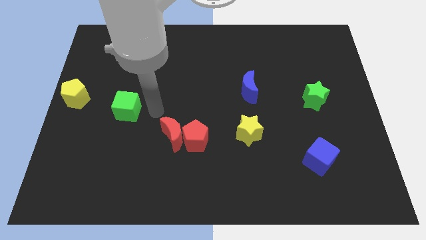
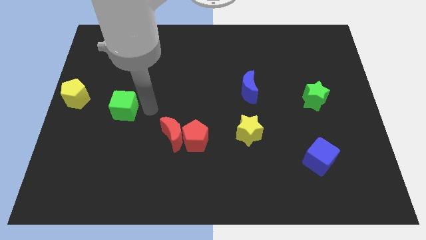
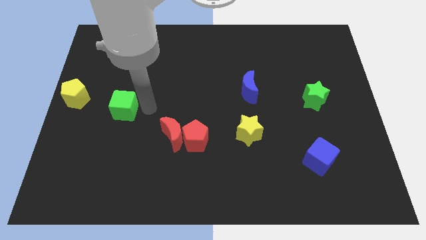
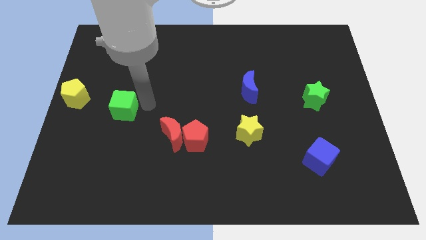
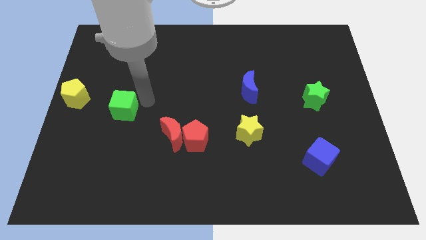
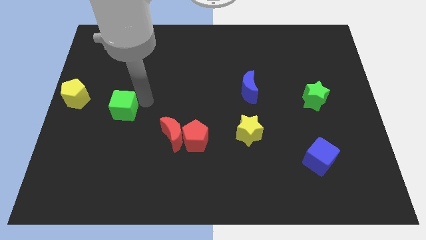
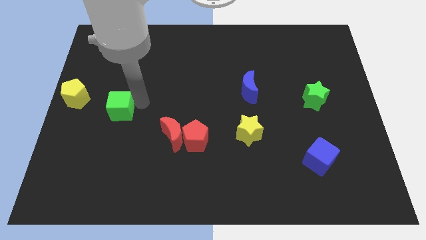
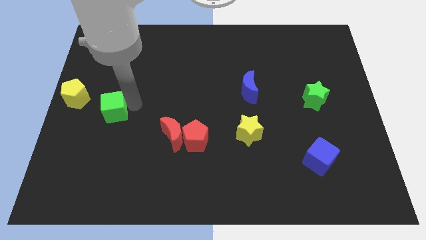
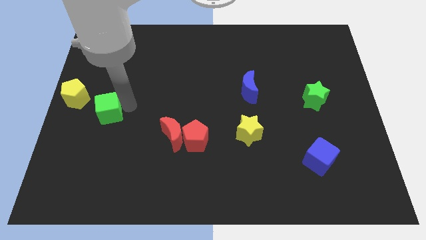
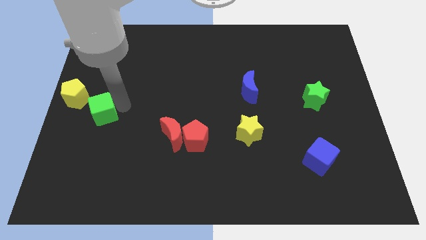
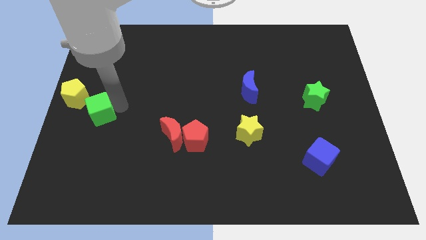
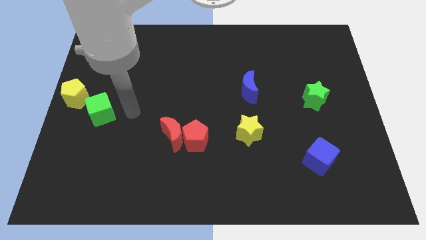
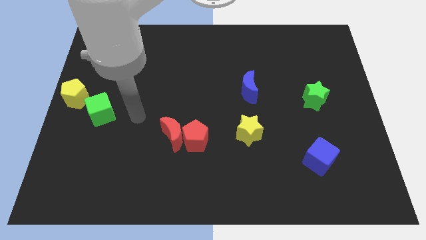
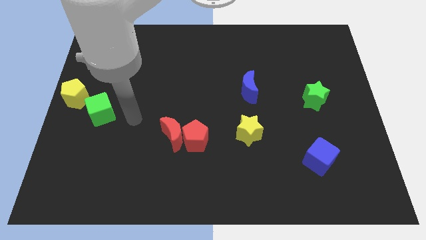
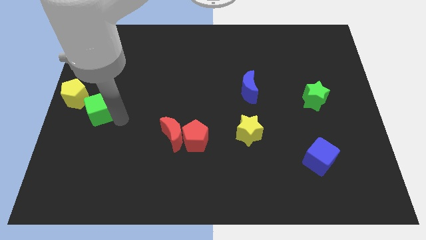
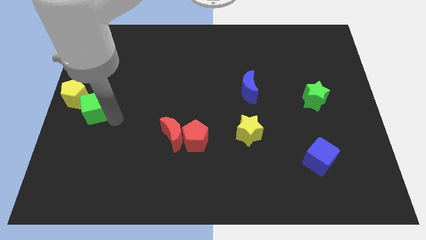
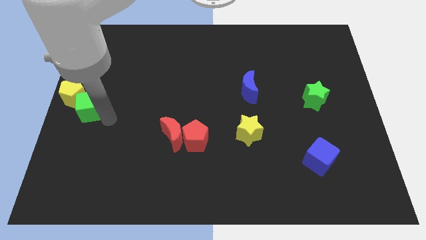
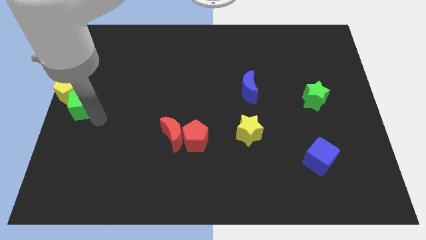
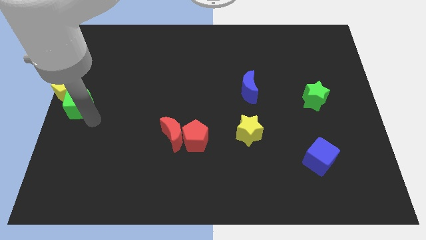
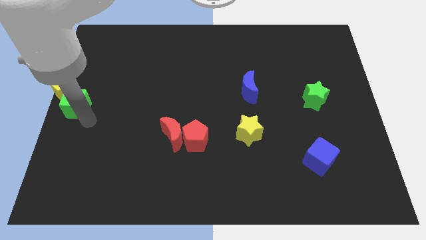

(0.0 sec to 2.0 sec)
push the green cube into the yellow pentagon

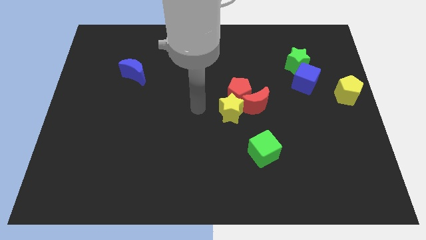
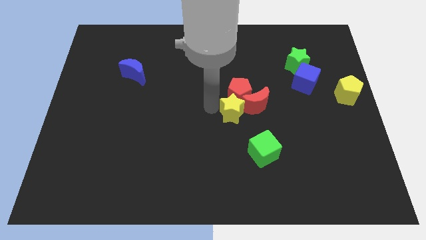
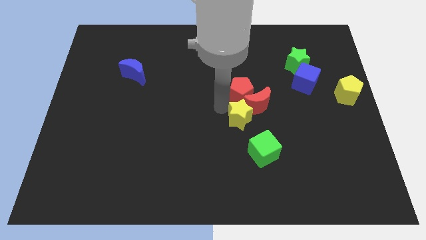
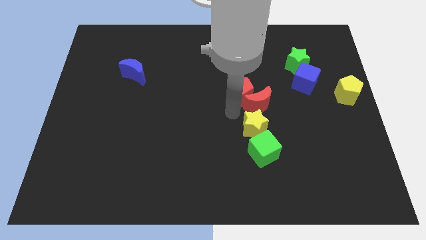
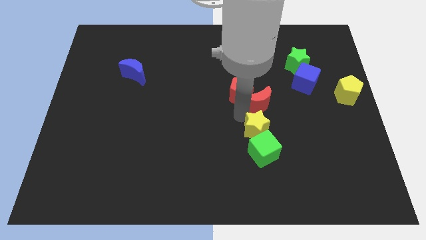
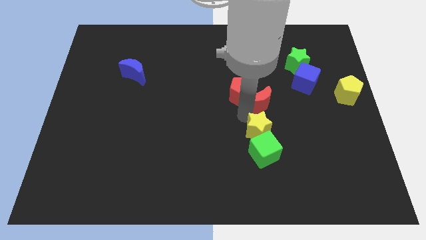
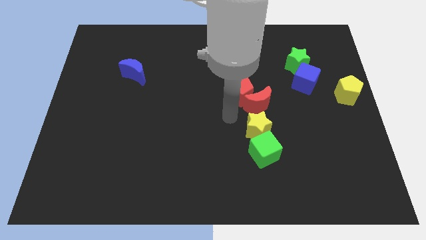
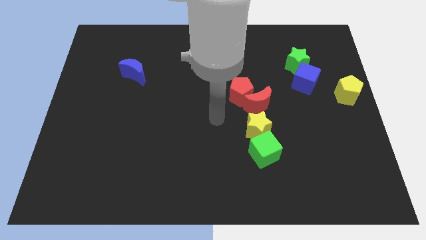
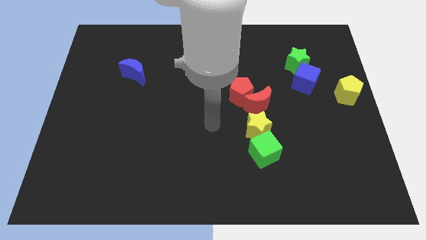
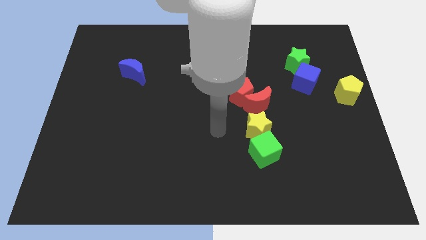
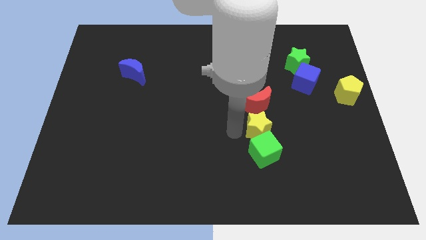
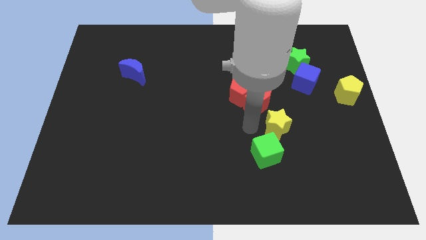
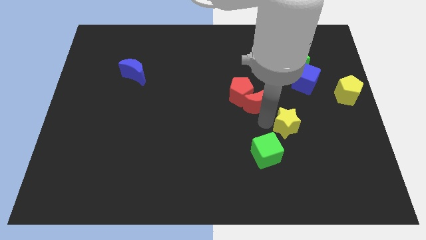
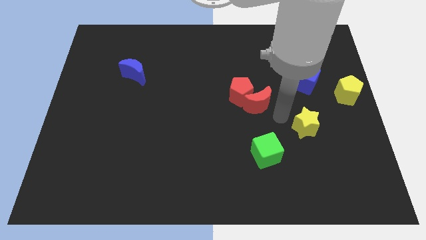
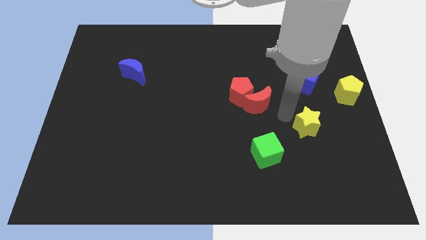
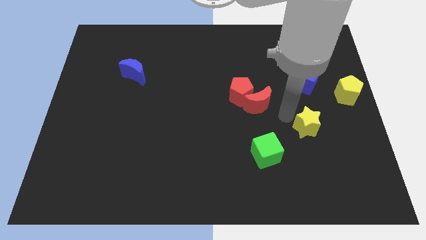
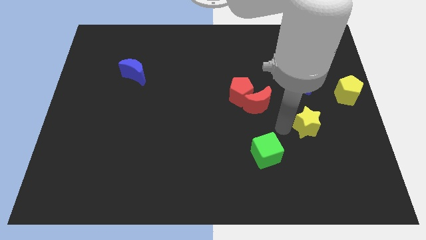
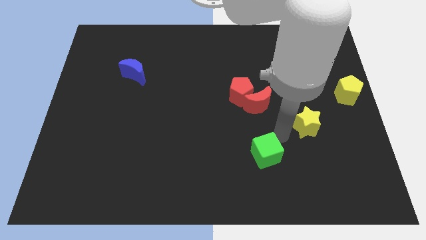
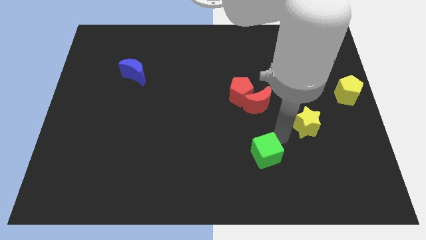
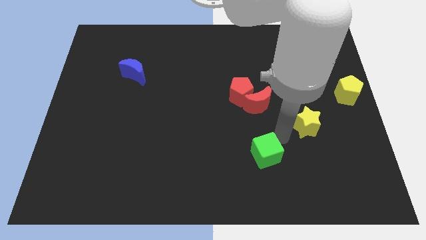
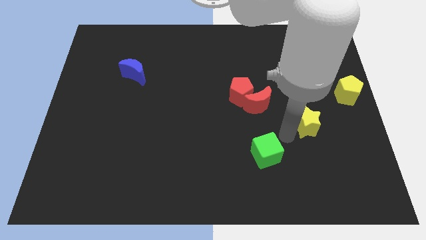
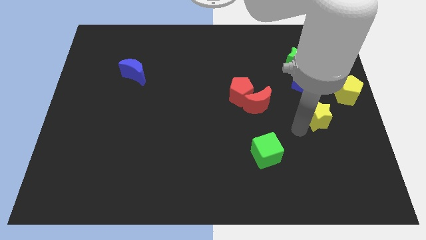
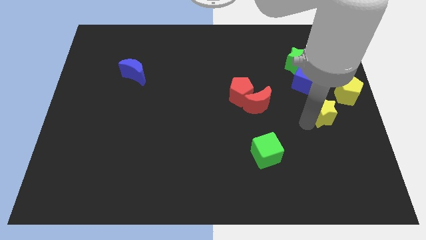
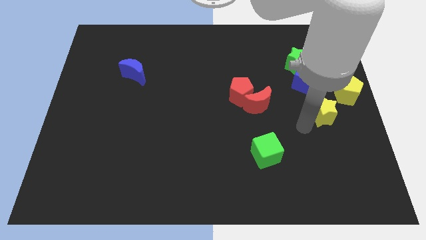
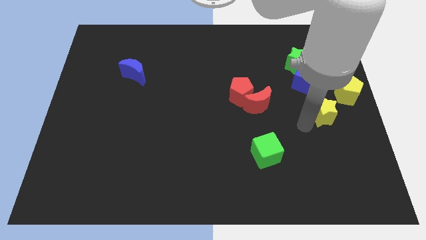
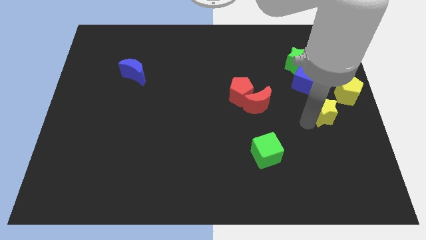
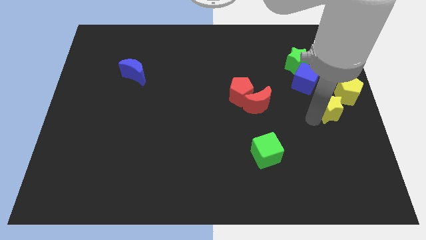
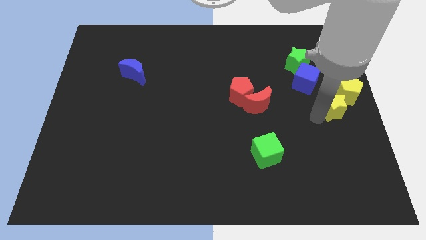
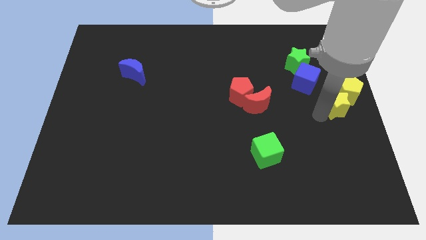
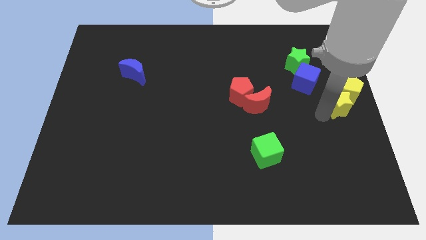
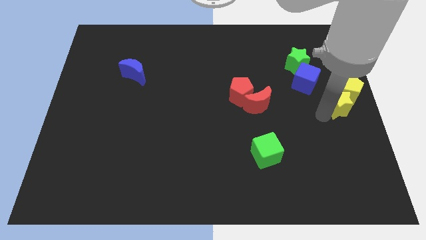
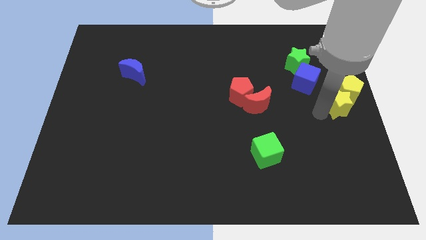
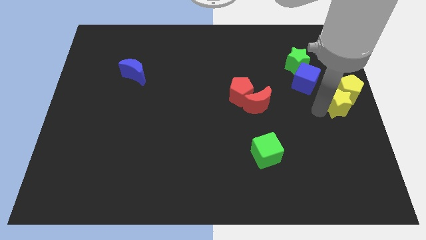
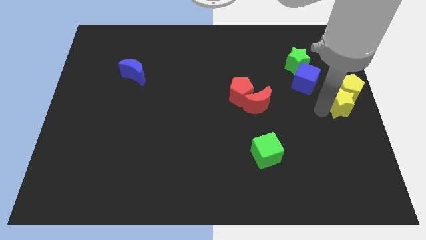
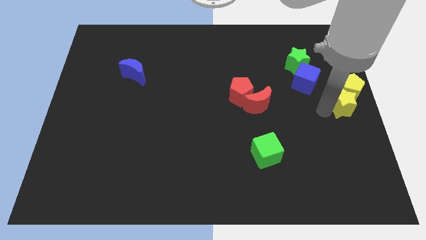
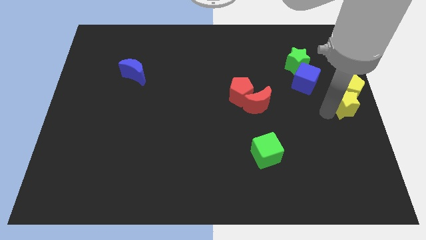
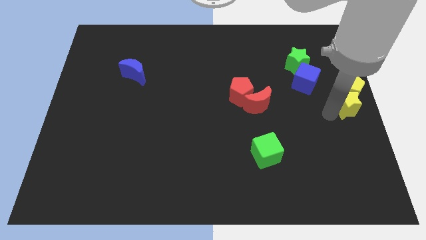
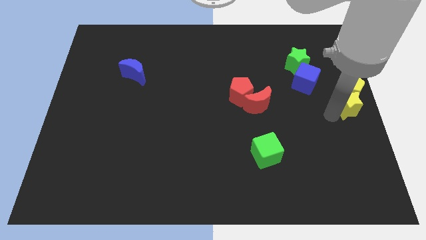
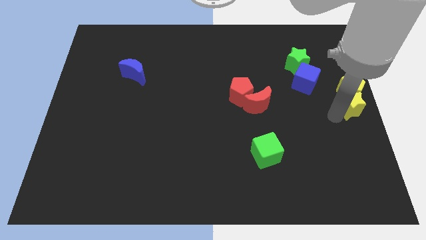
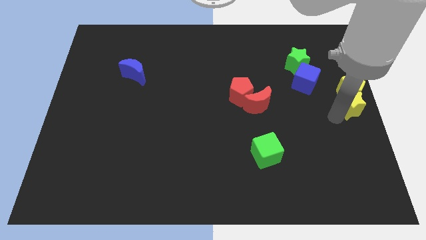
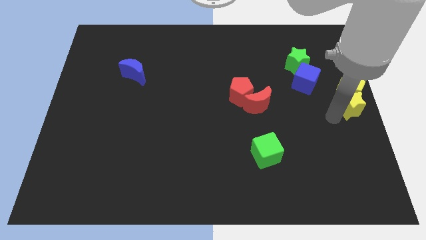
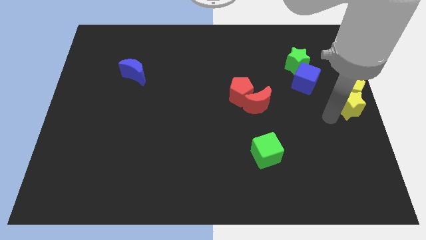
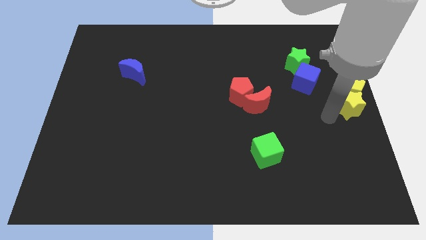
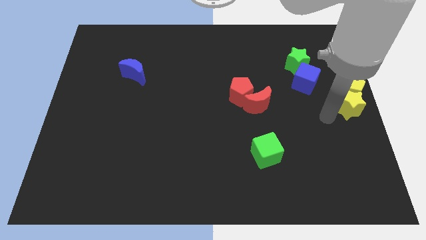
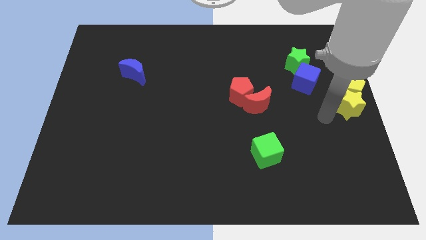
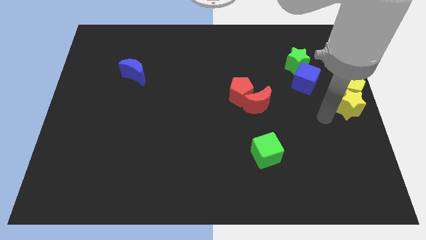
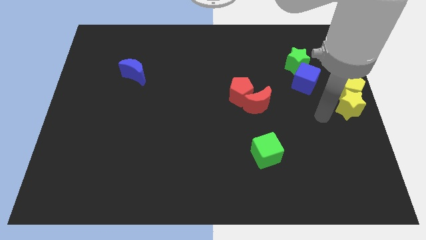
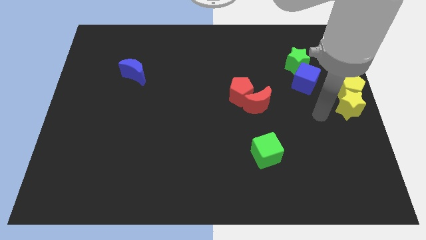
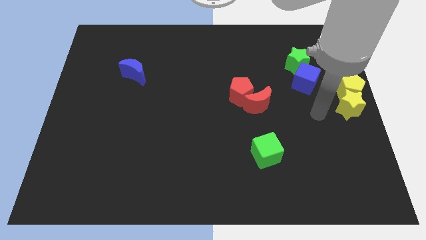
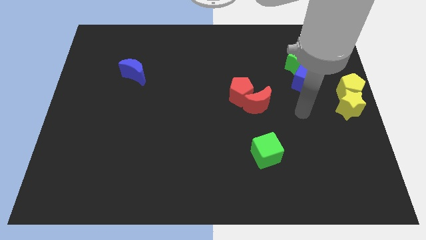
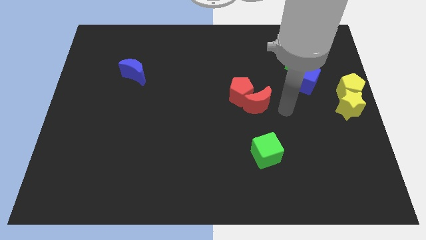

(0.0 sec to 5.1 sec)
push the yellow star to the bottom of the yellow pentagon

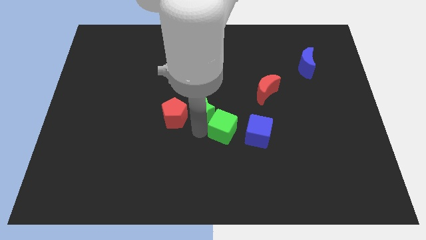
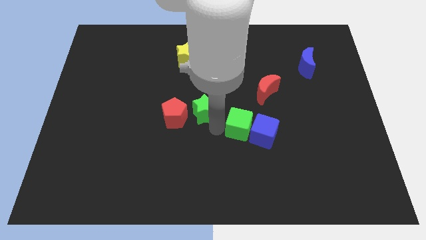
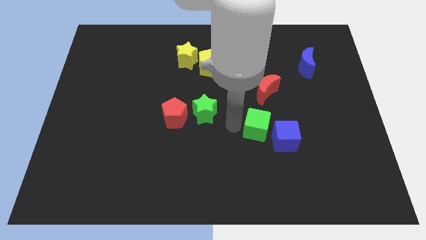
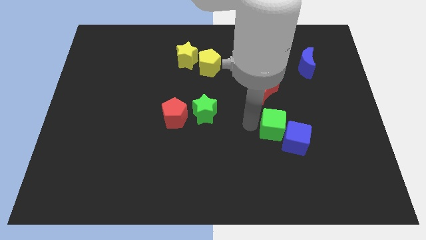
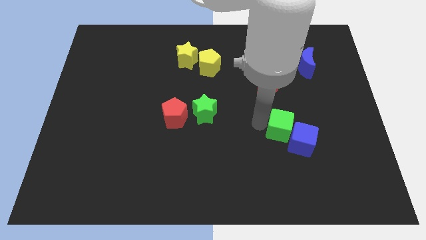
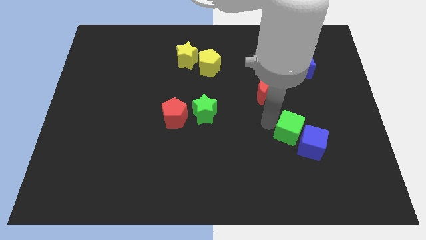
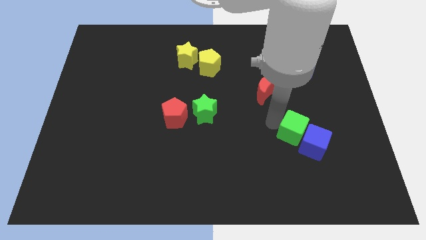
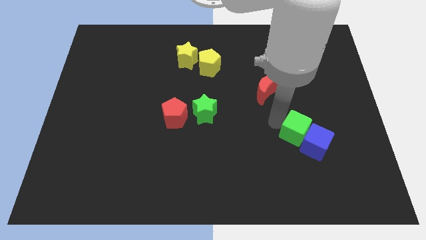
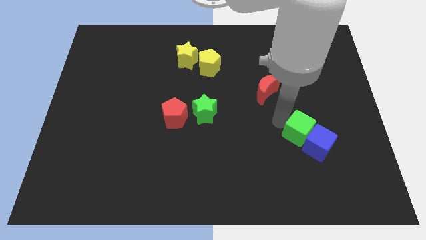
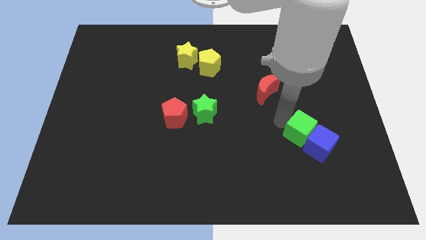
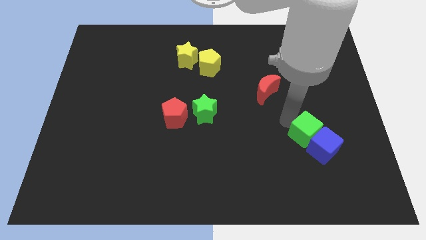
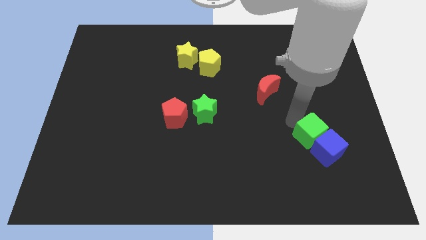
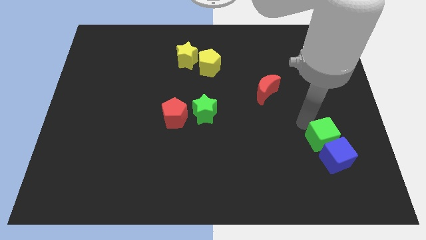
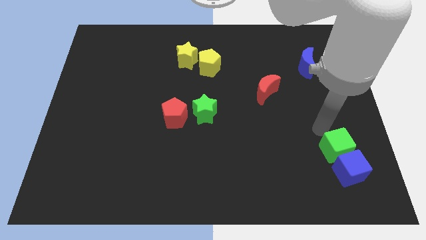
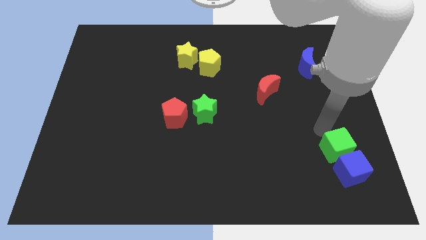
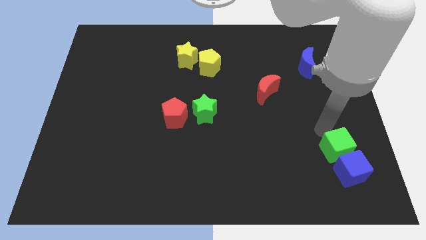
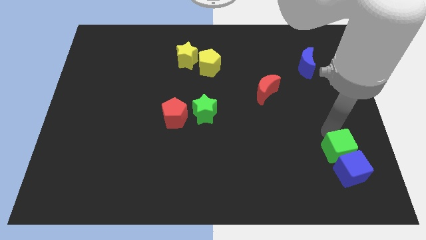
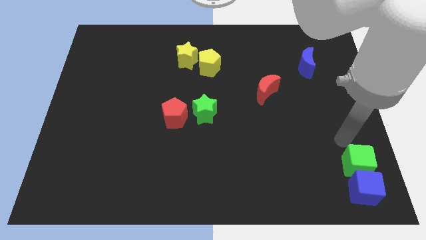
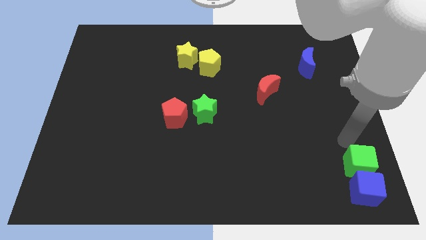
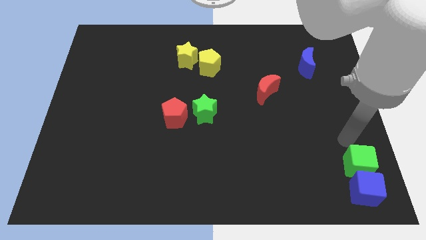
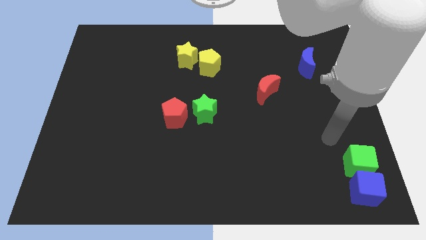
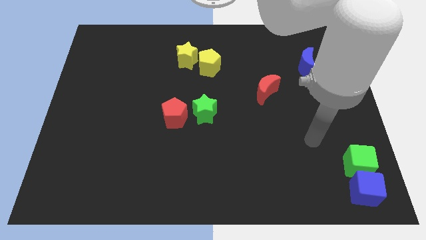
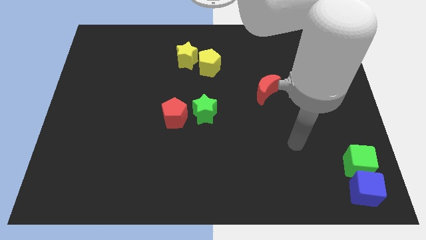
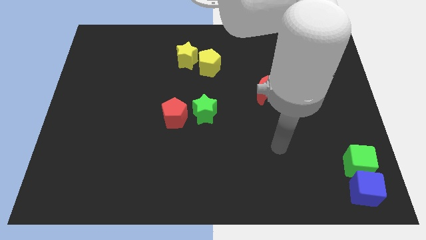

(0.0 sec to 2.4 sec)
move the green cube along with blue cube towards the bottom right side of the board
